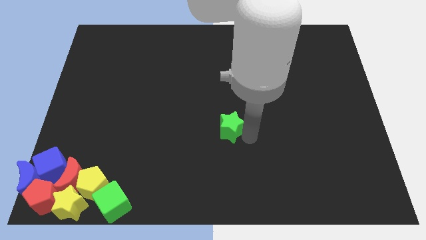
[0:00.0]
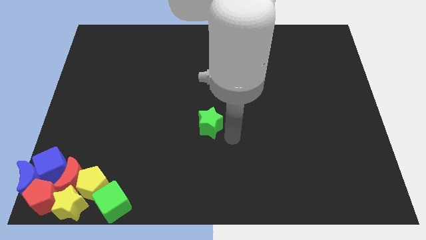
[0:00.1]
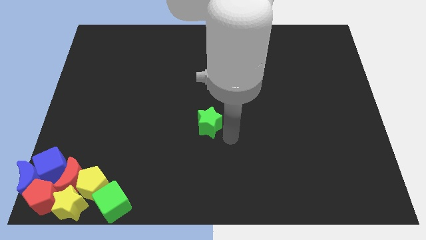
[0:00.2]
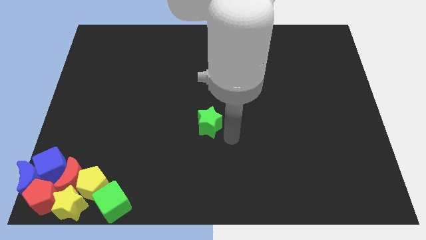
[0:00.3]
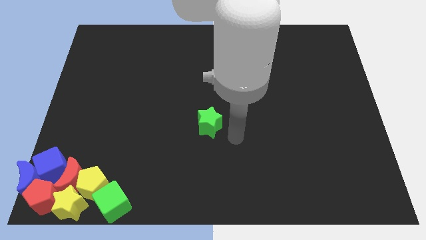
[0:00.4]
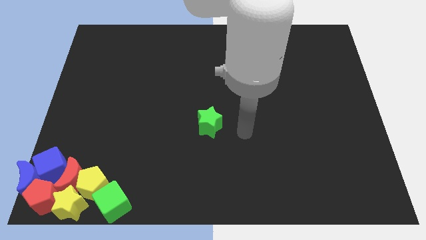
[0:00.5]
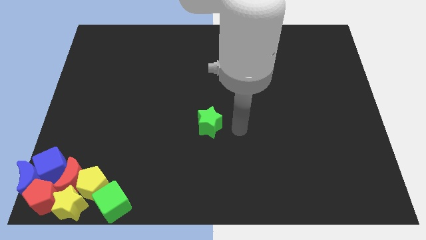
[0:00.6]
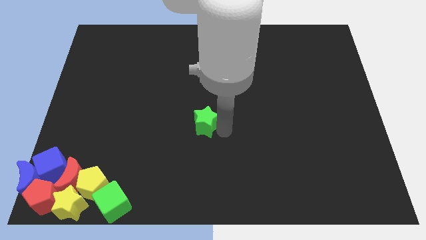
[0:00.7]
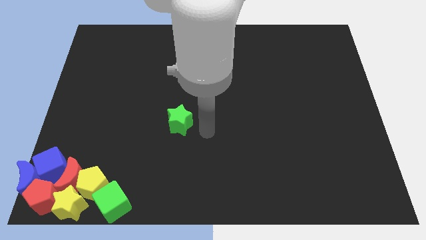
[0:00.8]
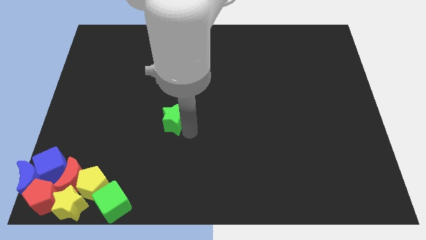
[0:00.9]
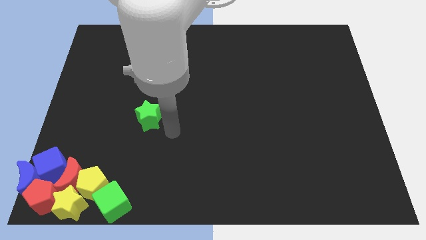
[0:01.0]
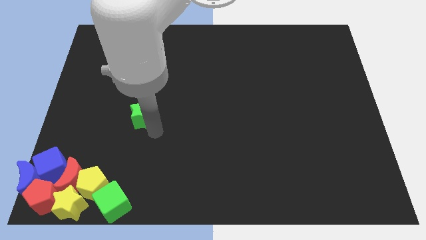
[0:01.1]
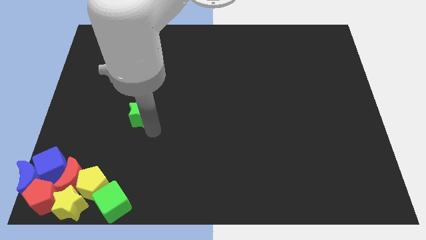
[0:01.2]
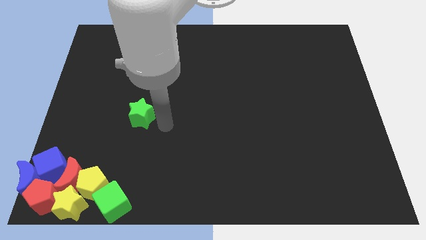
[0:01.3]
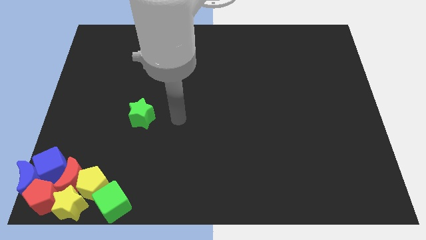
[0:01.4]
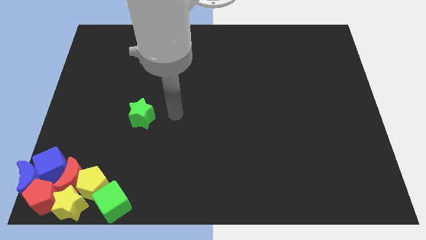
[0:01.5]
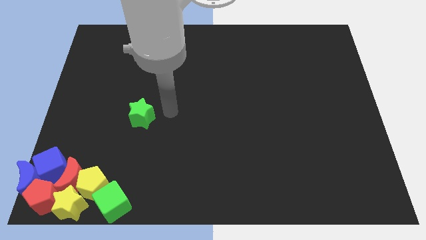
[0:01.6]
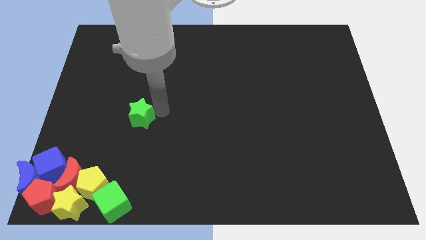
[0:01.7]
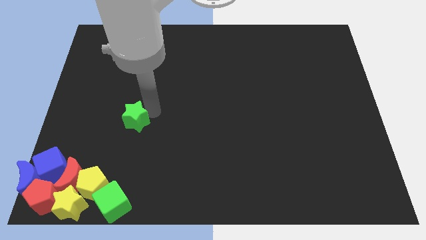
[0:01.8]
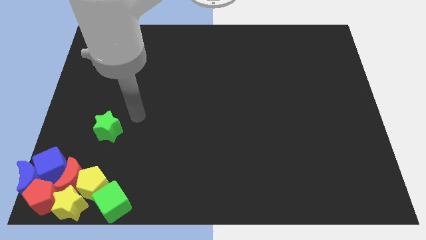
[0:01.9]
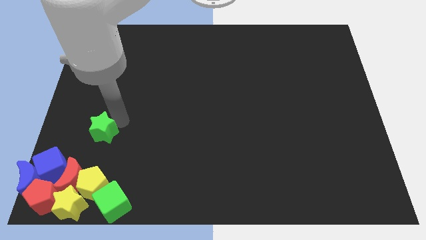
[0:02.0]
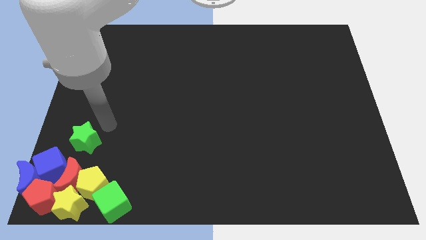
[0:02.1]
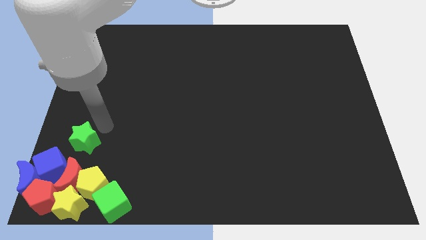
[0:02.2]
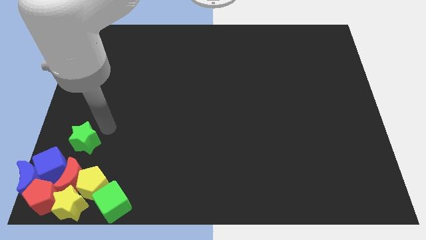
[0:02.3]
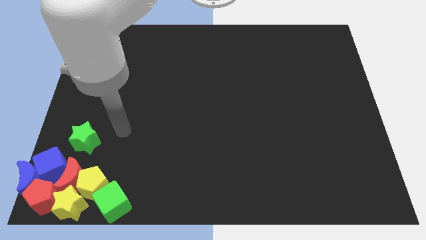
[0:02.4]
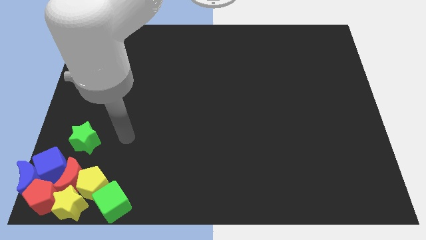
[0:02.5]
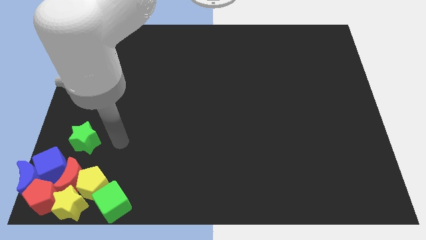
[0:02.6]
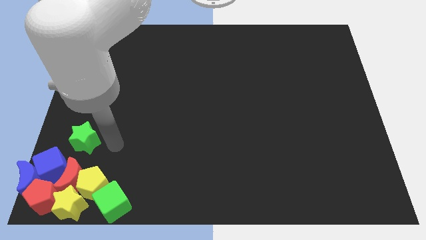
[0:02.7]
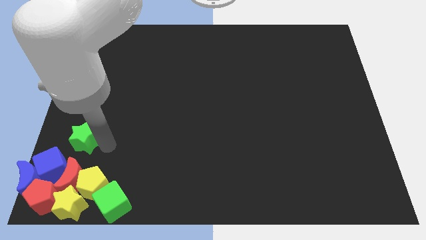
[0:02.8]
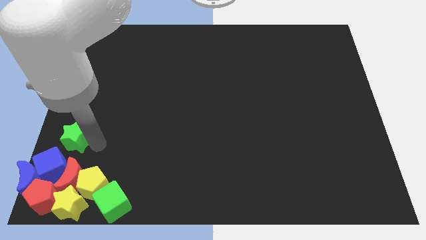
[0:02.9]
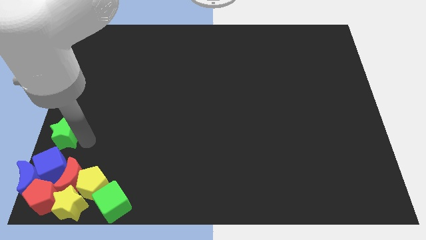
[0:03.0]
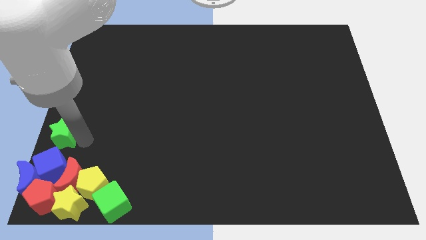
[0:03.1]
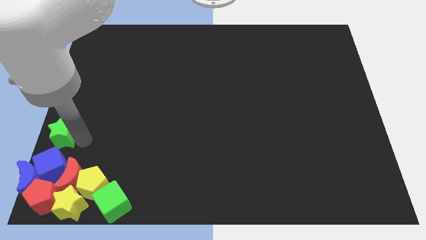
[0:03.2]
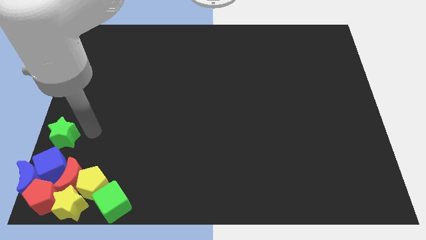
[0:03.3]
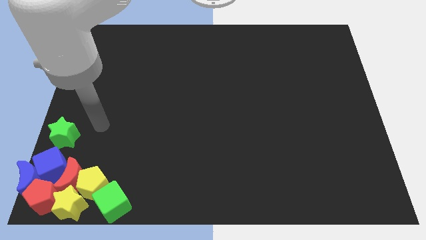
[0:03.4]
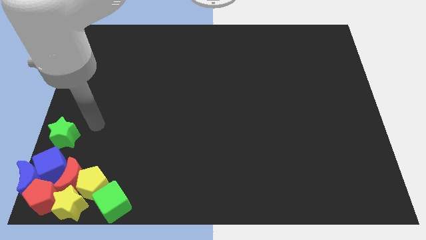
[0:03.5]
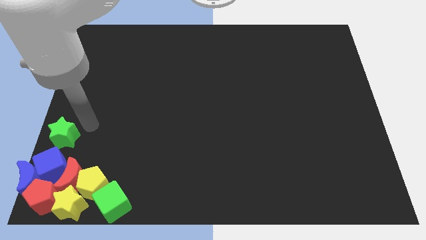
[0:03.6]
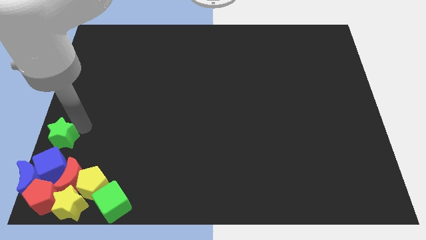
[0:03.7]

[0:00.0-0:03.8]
place the green star above the blue cube

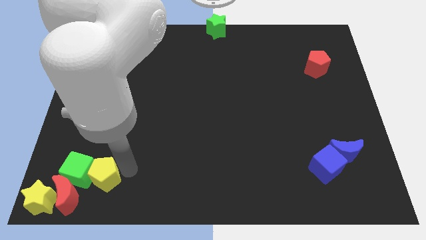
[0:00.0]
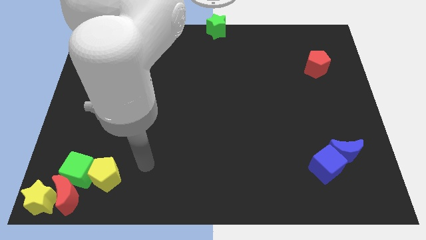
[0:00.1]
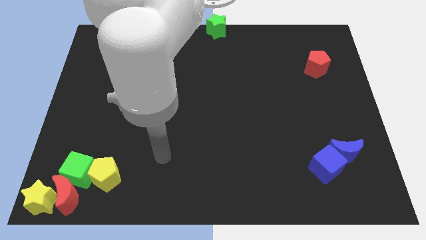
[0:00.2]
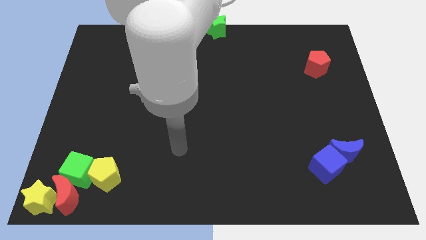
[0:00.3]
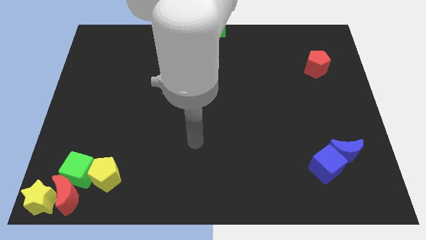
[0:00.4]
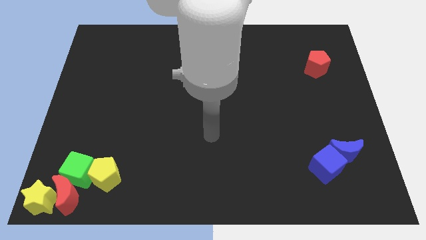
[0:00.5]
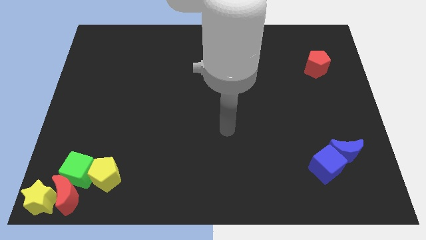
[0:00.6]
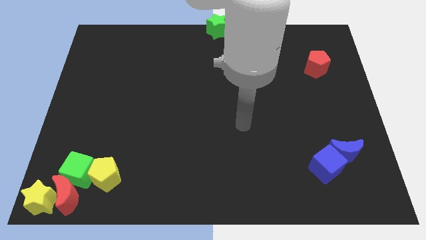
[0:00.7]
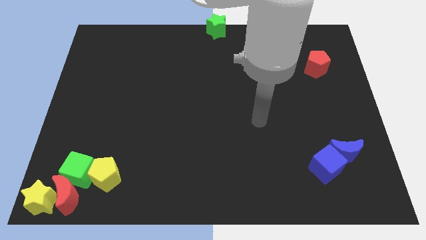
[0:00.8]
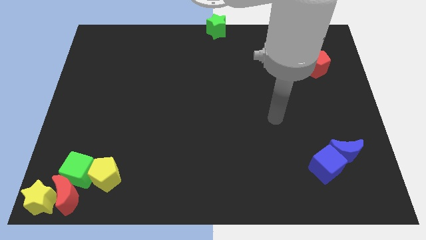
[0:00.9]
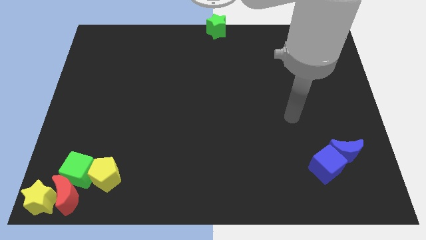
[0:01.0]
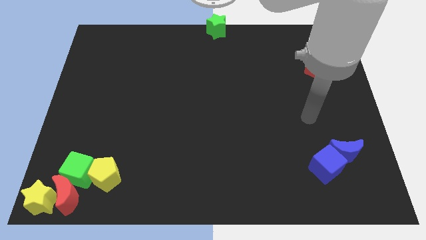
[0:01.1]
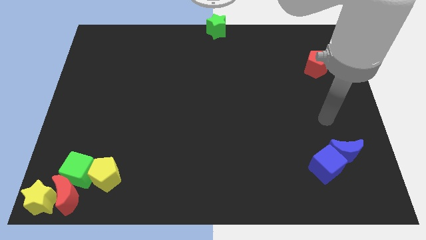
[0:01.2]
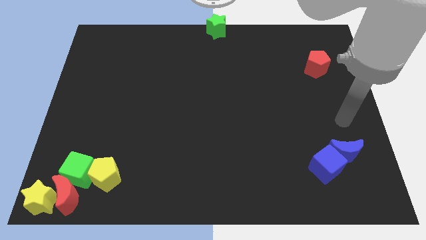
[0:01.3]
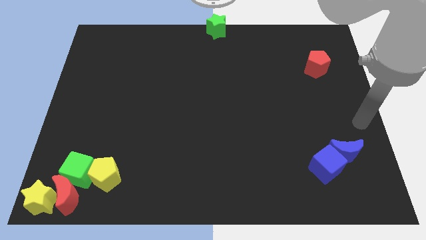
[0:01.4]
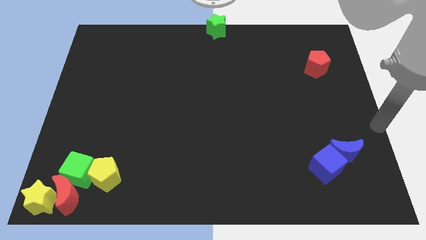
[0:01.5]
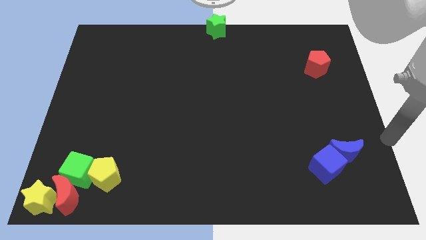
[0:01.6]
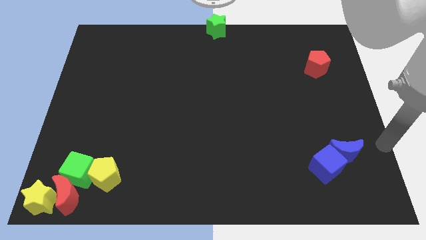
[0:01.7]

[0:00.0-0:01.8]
place your hand at the right side of the blue crescent

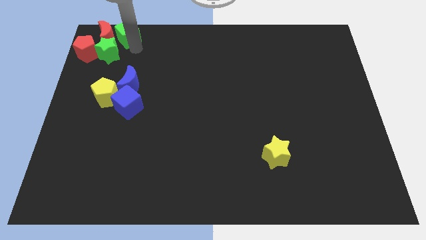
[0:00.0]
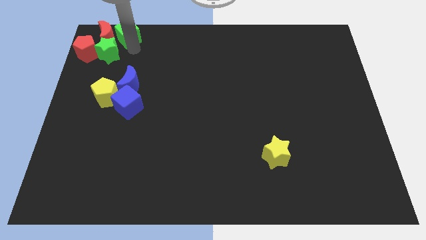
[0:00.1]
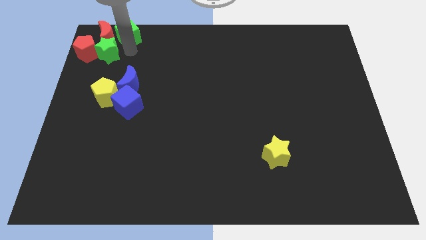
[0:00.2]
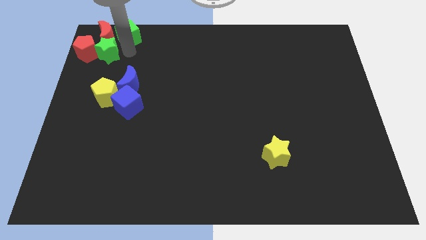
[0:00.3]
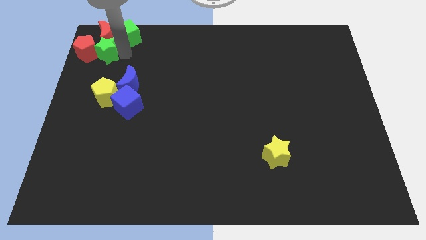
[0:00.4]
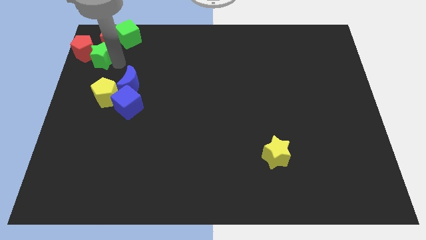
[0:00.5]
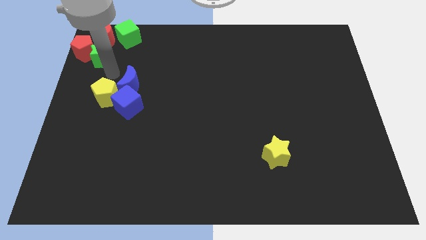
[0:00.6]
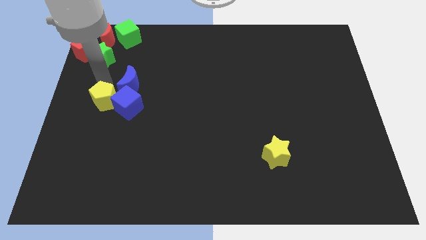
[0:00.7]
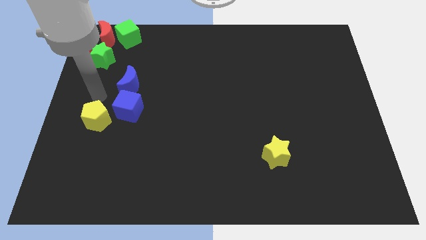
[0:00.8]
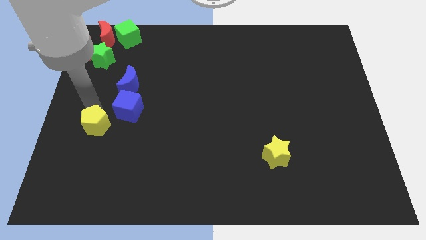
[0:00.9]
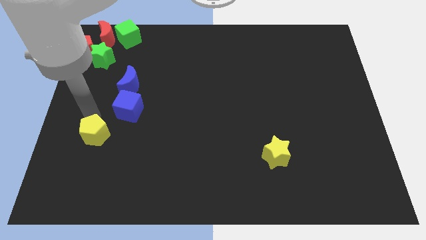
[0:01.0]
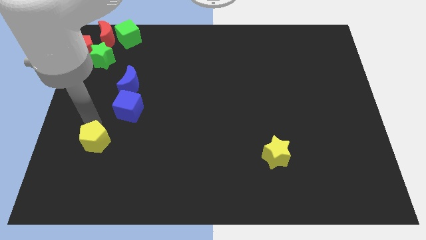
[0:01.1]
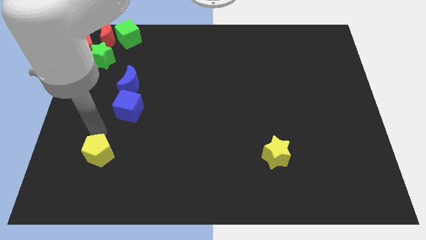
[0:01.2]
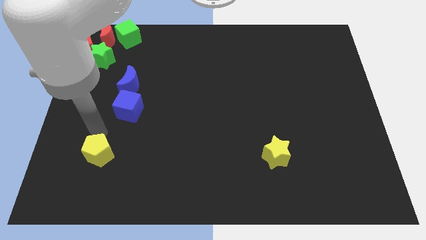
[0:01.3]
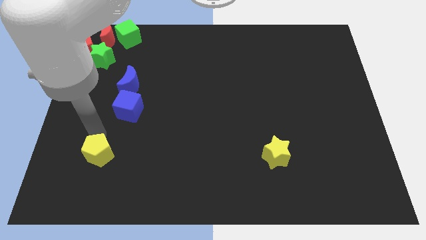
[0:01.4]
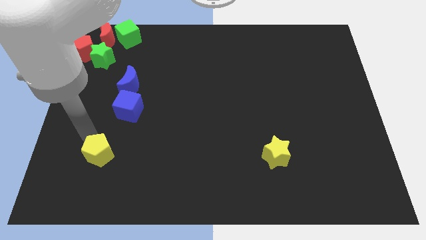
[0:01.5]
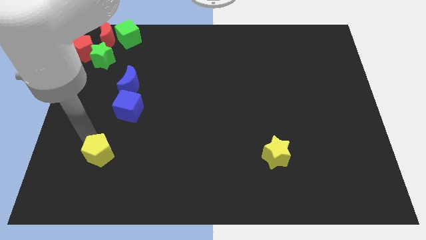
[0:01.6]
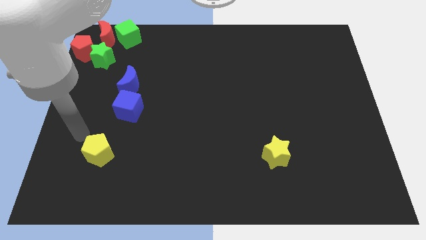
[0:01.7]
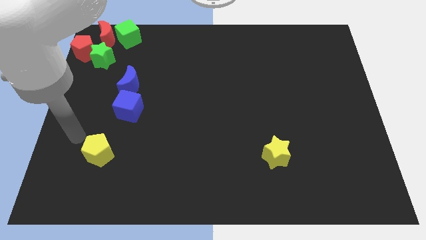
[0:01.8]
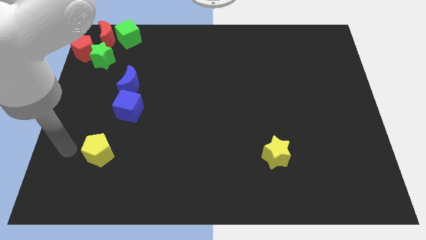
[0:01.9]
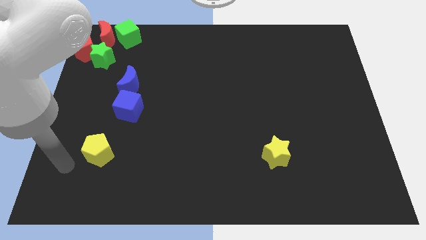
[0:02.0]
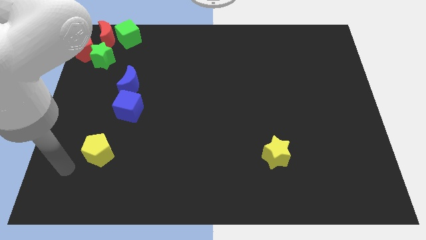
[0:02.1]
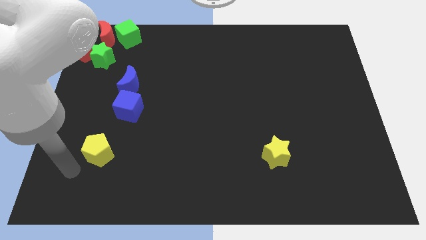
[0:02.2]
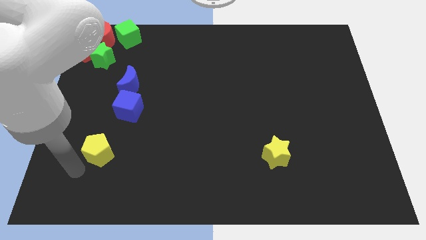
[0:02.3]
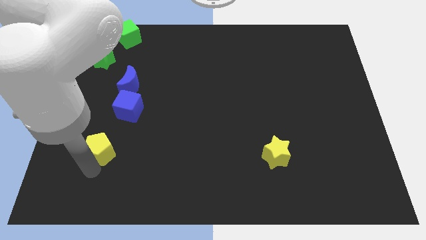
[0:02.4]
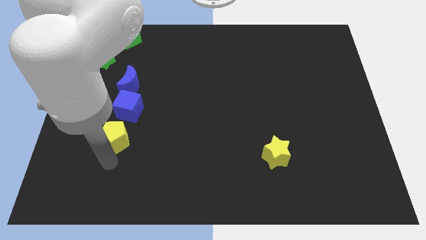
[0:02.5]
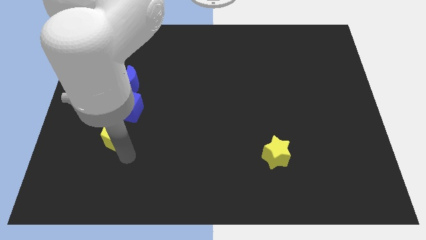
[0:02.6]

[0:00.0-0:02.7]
separate yellow pentagon from the blue cube

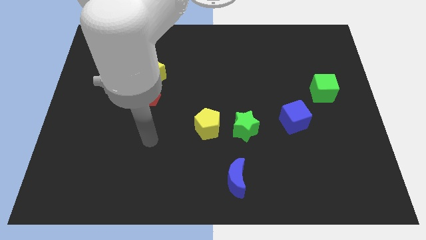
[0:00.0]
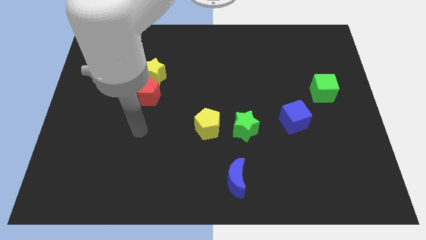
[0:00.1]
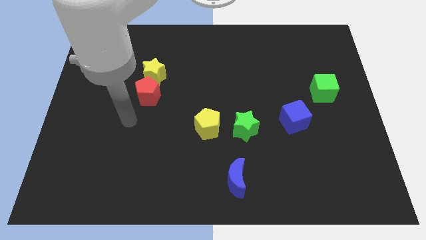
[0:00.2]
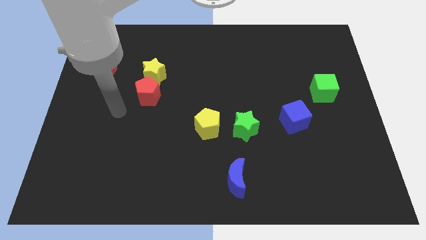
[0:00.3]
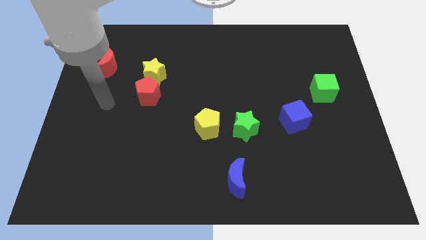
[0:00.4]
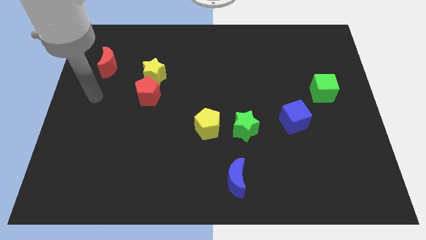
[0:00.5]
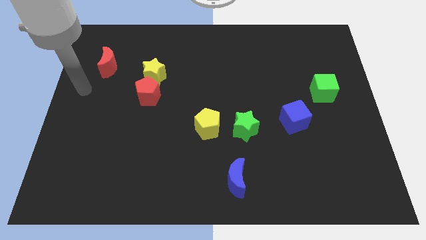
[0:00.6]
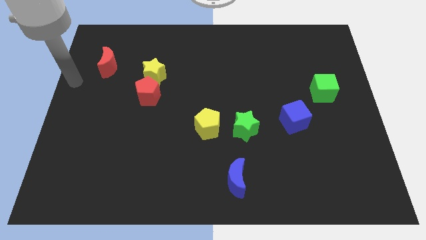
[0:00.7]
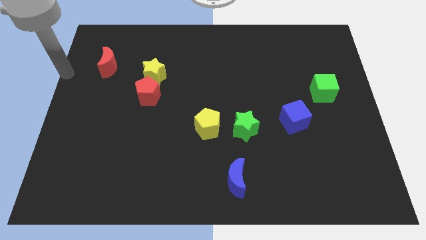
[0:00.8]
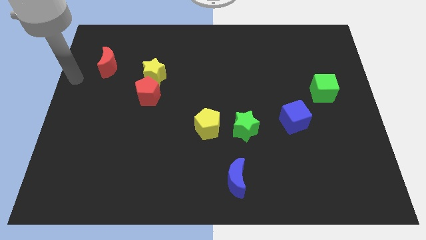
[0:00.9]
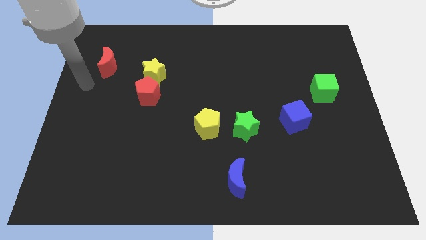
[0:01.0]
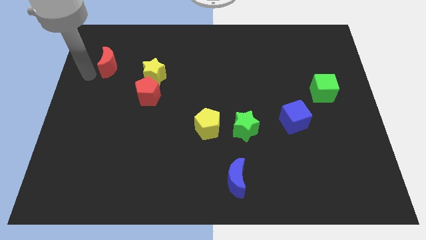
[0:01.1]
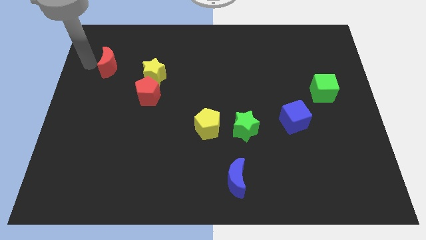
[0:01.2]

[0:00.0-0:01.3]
point your arm at the left of the red crescent
